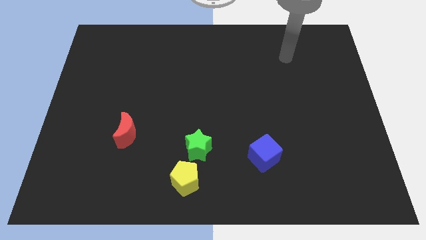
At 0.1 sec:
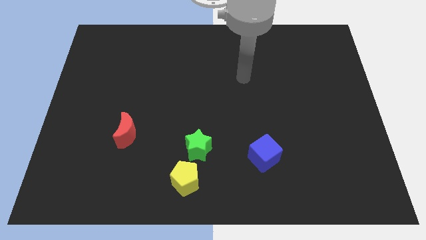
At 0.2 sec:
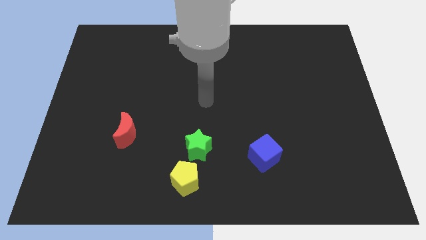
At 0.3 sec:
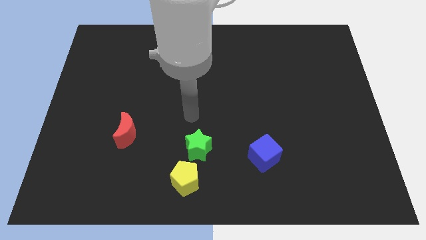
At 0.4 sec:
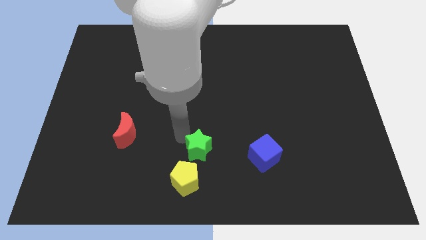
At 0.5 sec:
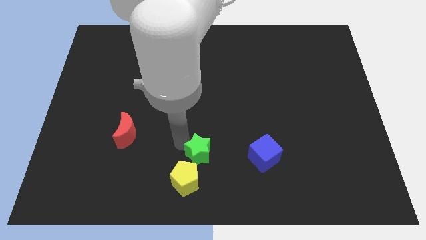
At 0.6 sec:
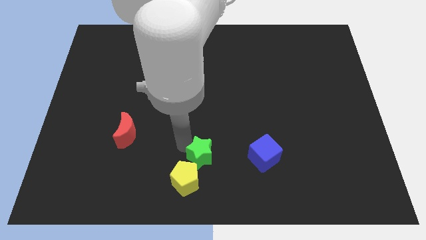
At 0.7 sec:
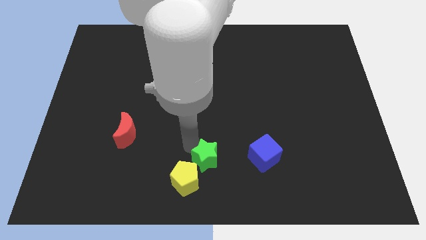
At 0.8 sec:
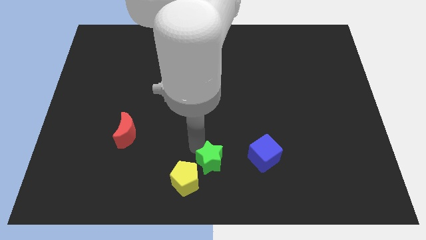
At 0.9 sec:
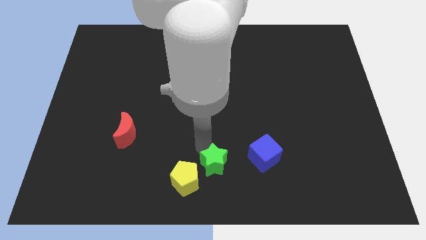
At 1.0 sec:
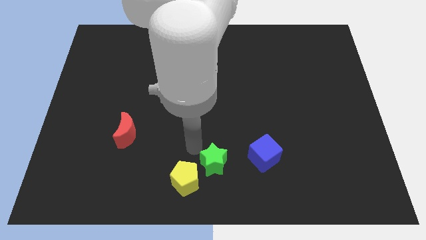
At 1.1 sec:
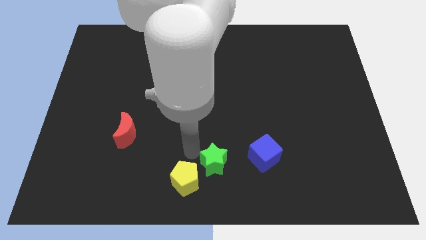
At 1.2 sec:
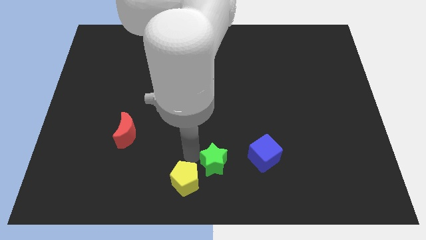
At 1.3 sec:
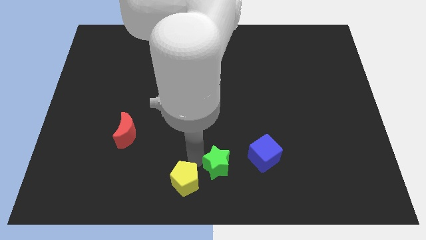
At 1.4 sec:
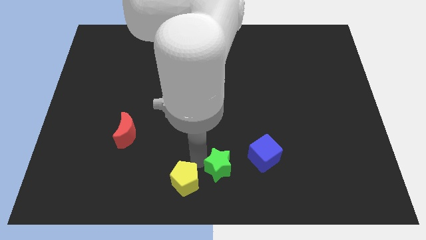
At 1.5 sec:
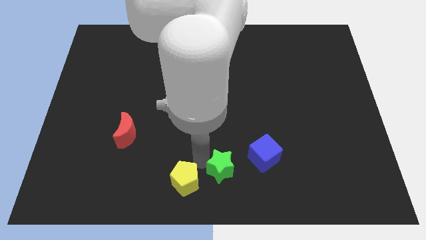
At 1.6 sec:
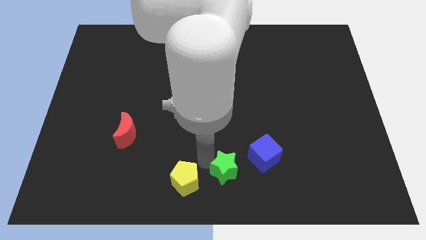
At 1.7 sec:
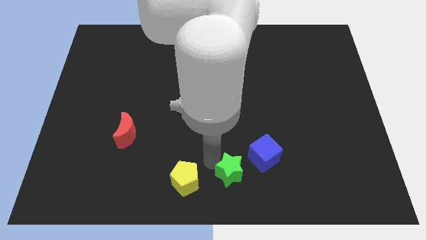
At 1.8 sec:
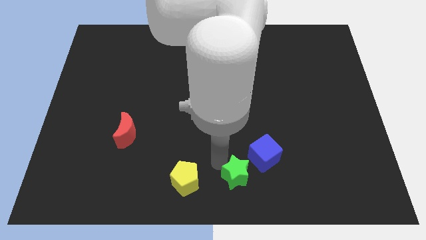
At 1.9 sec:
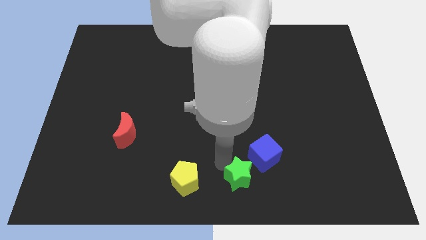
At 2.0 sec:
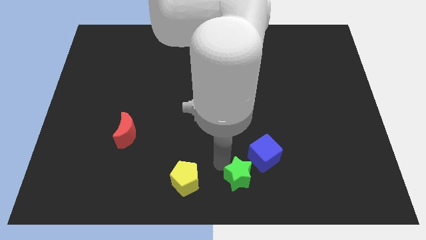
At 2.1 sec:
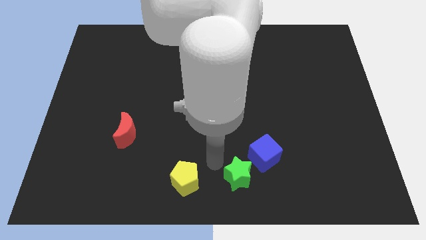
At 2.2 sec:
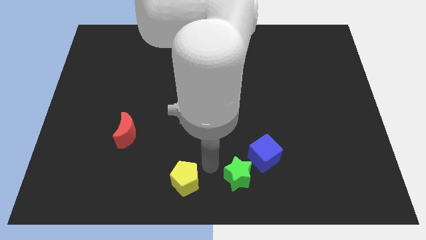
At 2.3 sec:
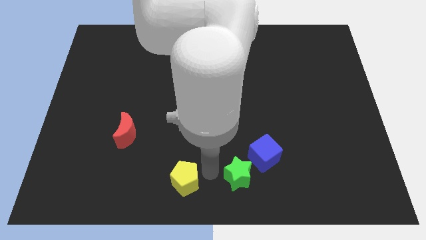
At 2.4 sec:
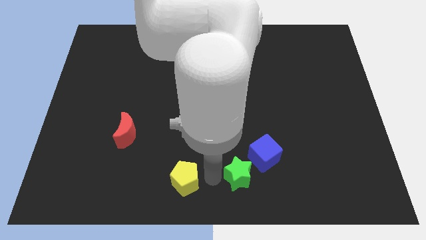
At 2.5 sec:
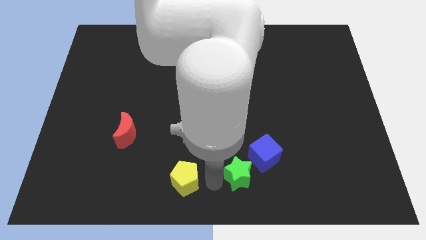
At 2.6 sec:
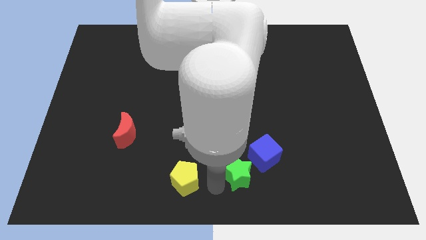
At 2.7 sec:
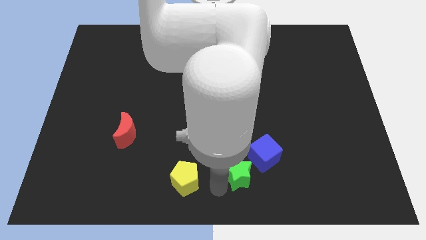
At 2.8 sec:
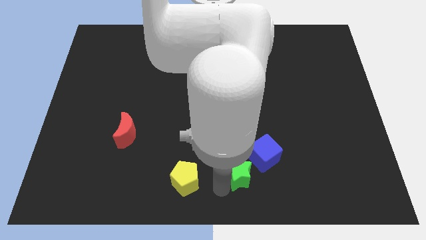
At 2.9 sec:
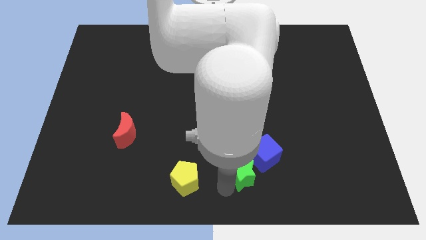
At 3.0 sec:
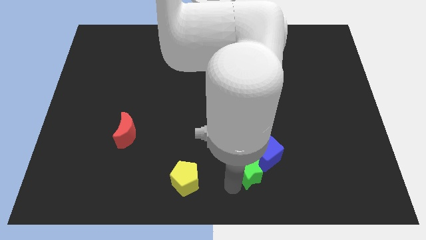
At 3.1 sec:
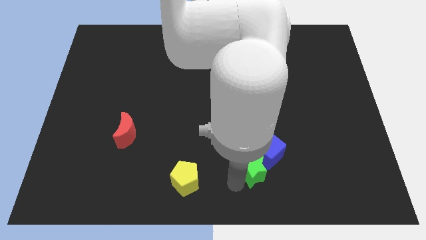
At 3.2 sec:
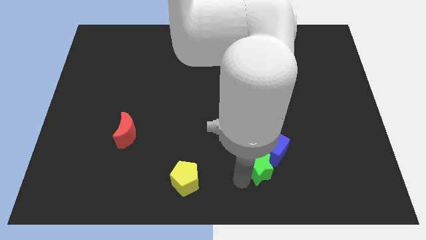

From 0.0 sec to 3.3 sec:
push the green block next to the blue cube

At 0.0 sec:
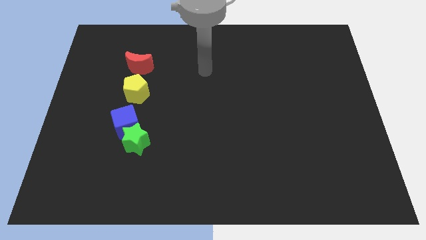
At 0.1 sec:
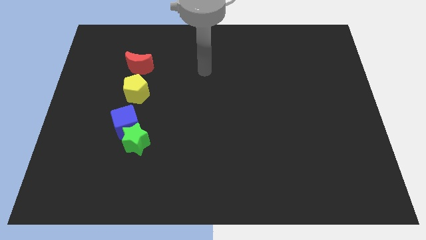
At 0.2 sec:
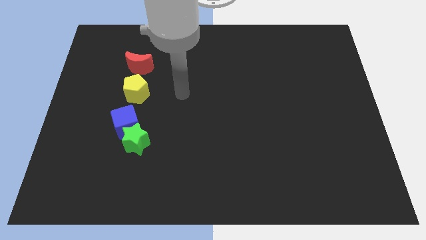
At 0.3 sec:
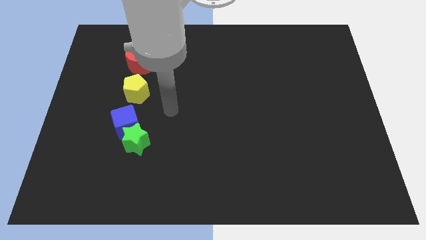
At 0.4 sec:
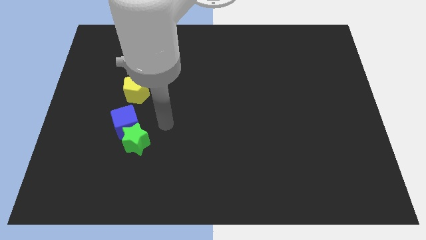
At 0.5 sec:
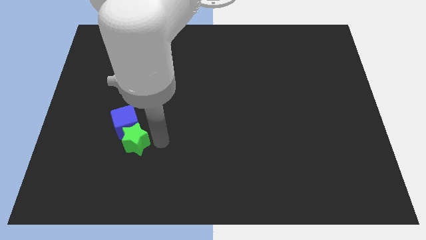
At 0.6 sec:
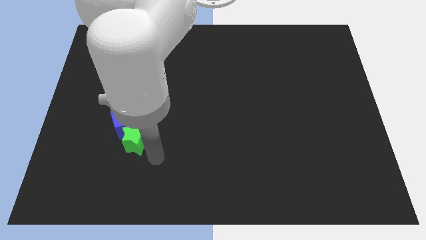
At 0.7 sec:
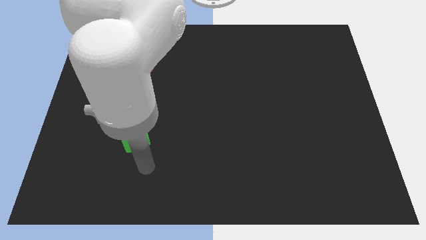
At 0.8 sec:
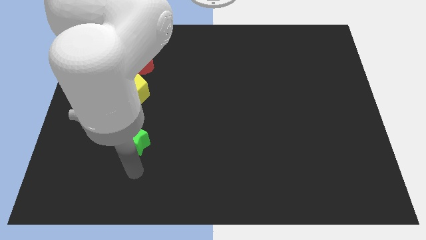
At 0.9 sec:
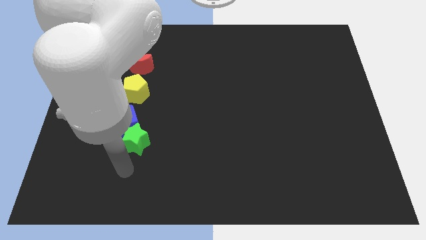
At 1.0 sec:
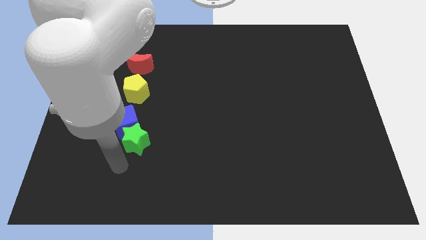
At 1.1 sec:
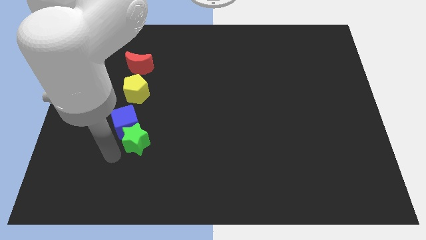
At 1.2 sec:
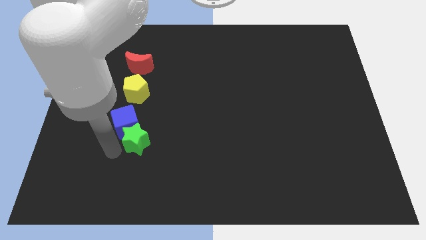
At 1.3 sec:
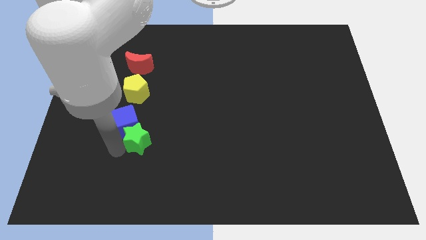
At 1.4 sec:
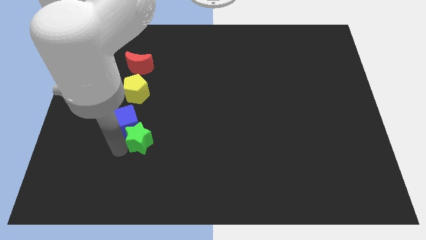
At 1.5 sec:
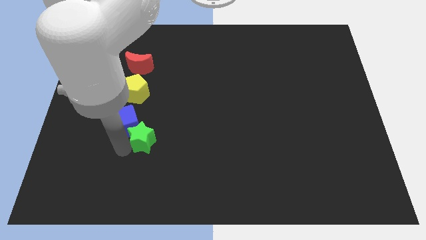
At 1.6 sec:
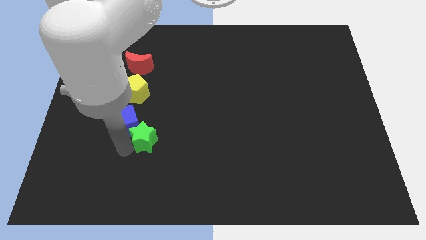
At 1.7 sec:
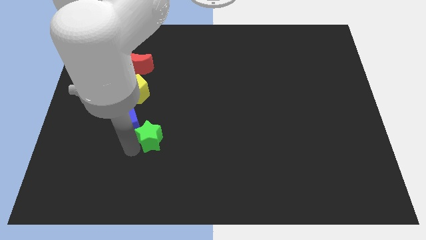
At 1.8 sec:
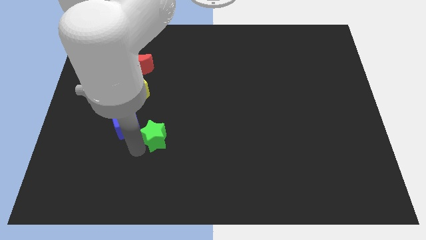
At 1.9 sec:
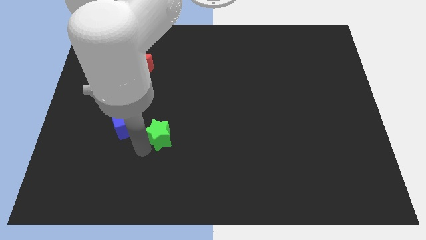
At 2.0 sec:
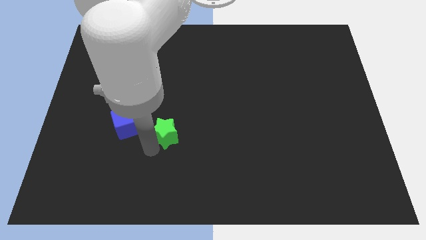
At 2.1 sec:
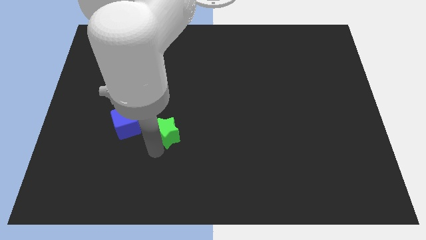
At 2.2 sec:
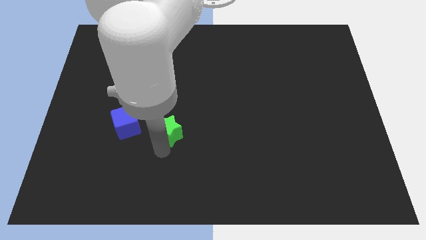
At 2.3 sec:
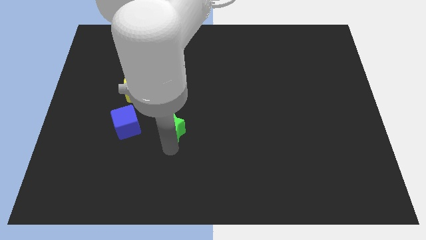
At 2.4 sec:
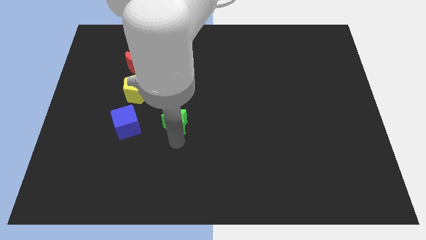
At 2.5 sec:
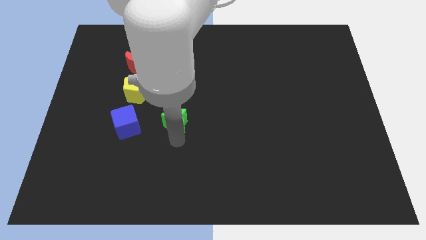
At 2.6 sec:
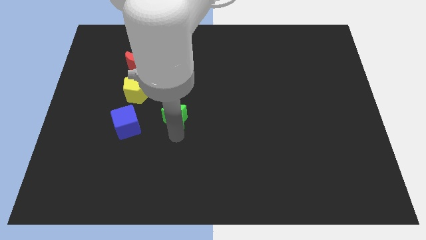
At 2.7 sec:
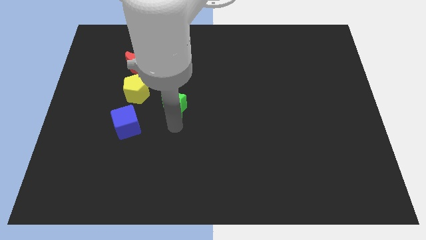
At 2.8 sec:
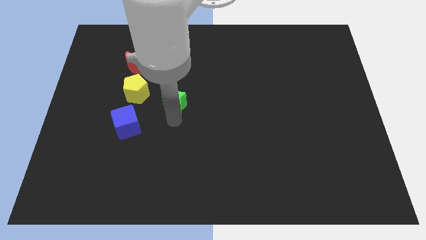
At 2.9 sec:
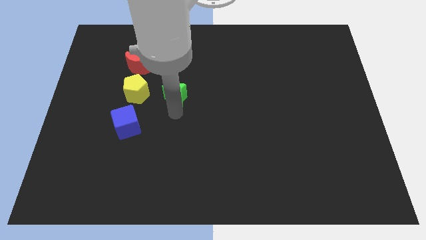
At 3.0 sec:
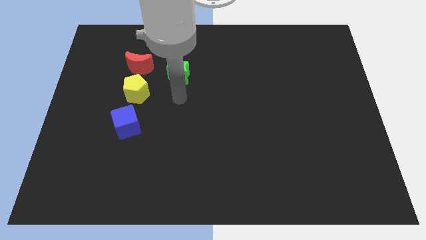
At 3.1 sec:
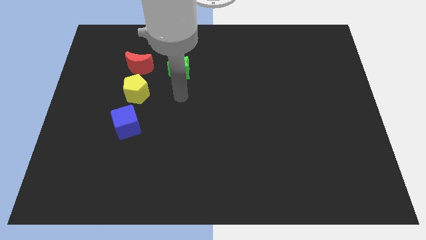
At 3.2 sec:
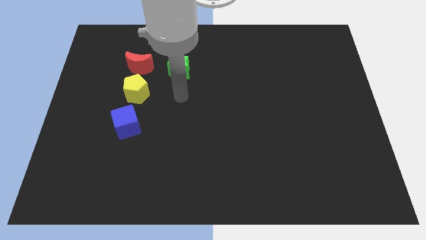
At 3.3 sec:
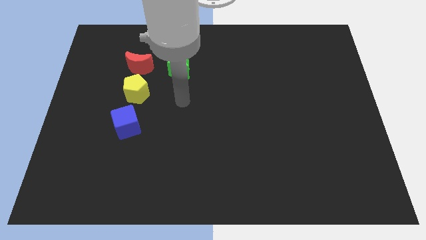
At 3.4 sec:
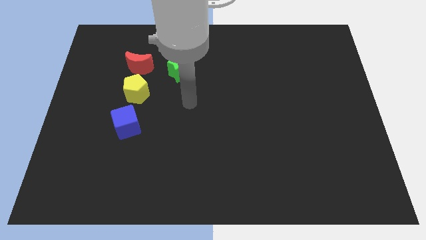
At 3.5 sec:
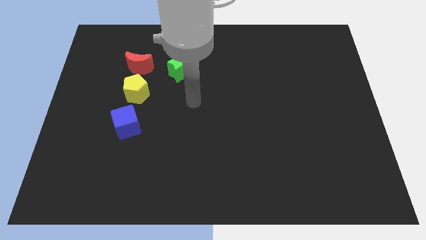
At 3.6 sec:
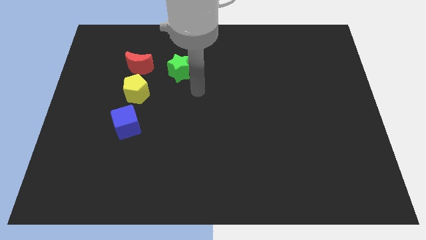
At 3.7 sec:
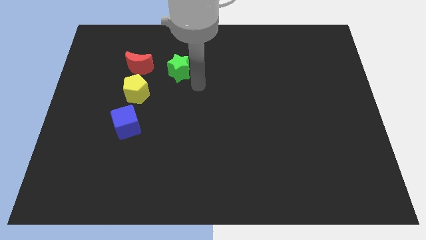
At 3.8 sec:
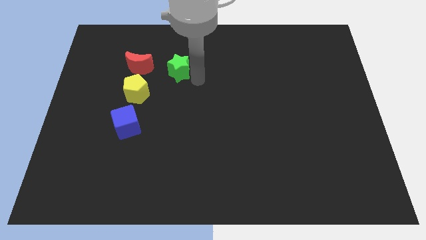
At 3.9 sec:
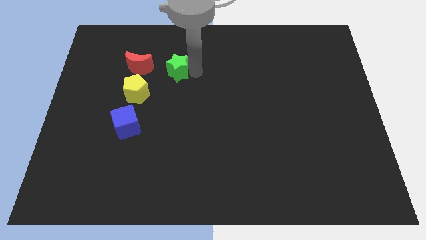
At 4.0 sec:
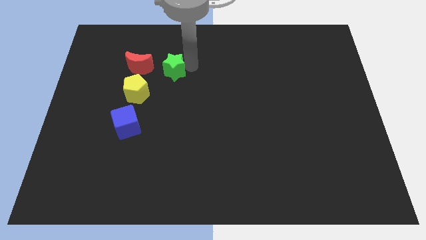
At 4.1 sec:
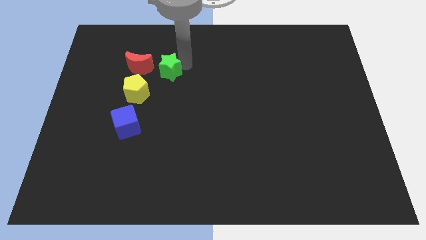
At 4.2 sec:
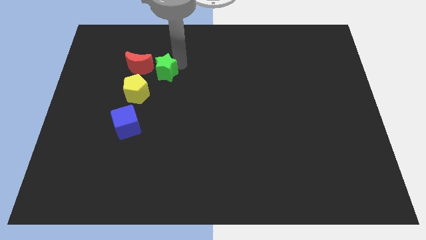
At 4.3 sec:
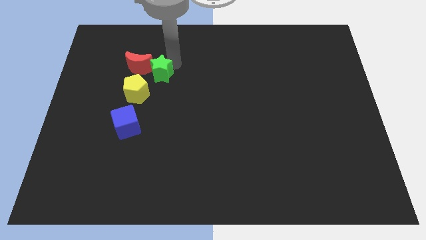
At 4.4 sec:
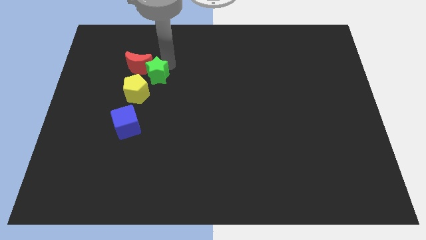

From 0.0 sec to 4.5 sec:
push the star close to the red block

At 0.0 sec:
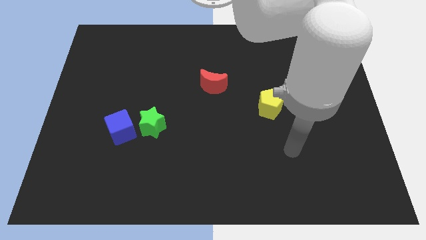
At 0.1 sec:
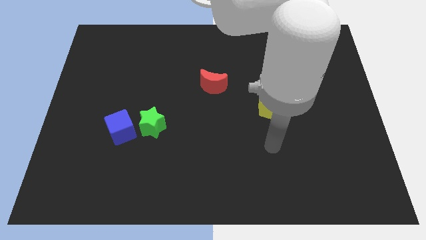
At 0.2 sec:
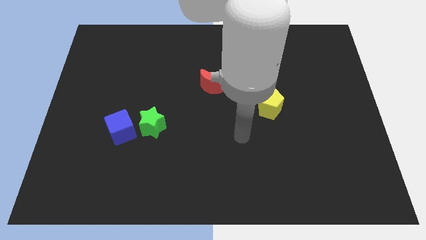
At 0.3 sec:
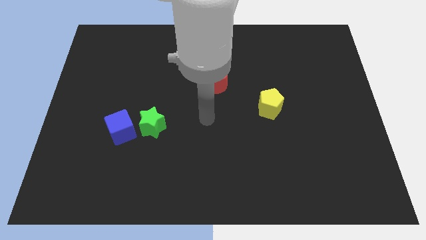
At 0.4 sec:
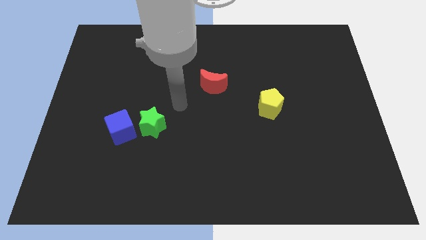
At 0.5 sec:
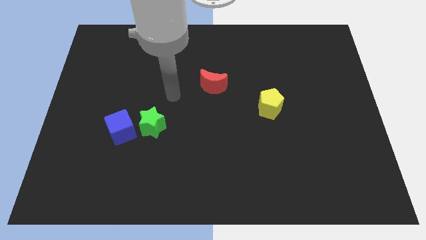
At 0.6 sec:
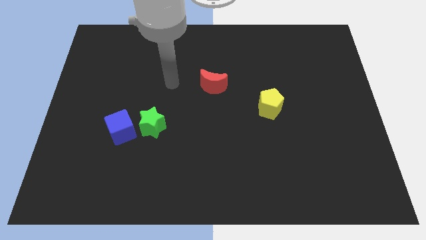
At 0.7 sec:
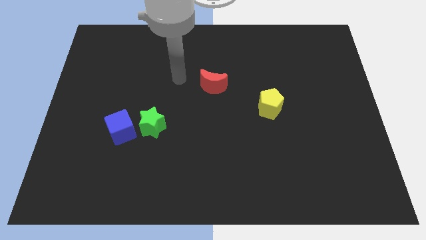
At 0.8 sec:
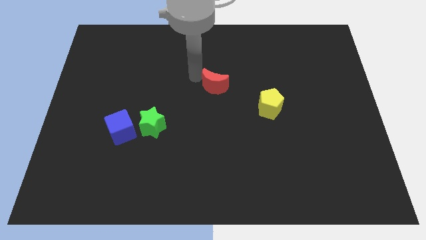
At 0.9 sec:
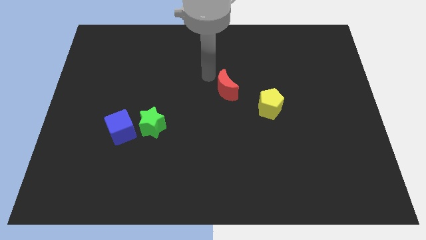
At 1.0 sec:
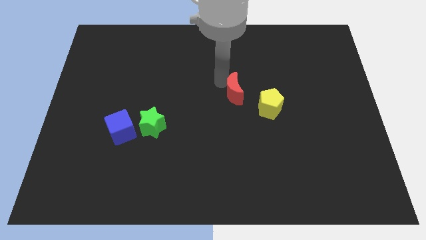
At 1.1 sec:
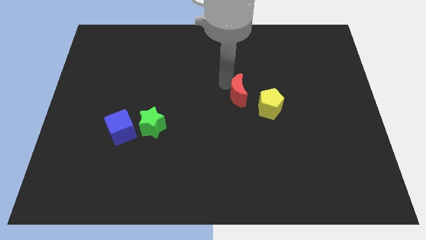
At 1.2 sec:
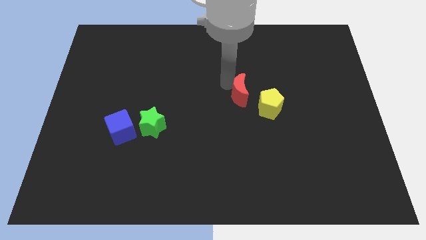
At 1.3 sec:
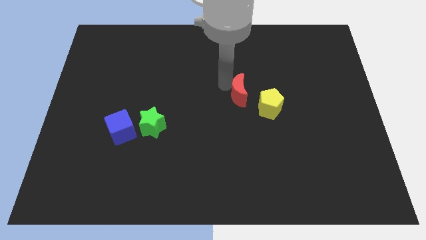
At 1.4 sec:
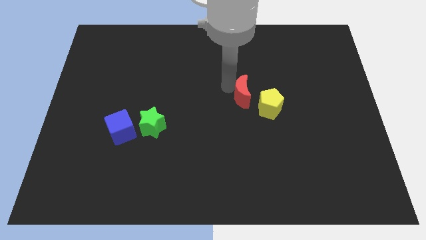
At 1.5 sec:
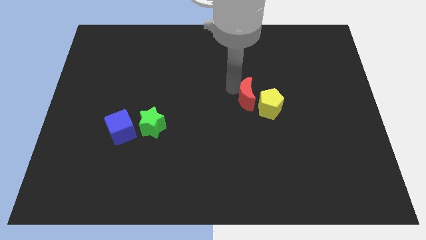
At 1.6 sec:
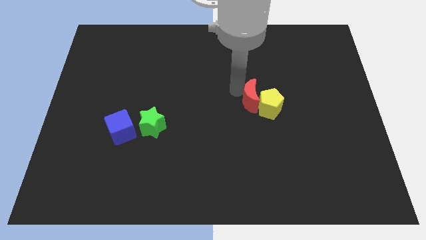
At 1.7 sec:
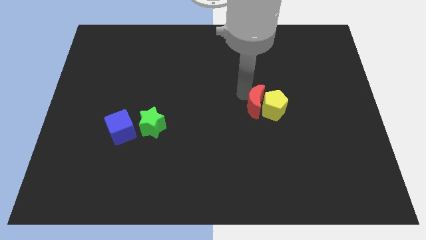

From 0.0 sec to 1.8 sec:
push the red block to the yellow block
